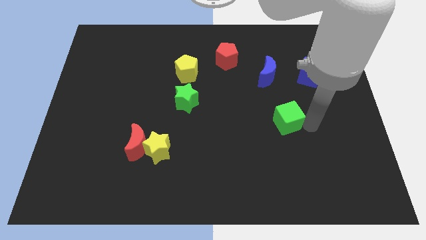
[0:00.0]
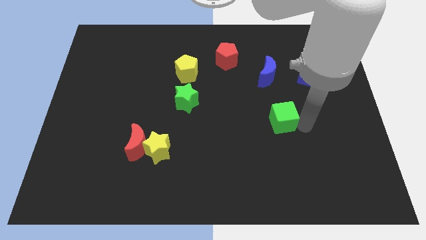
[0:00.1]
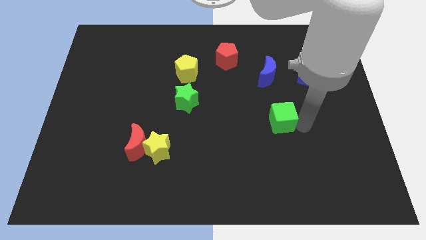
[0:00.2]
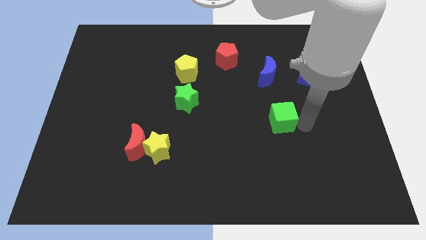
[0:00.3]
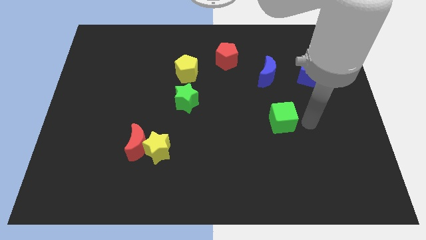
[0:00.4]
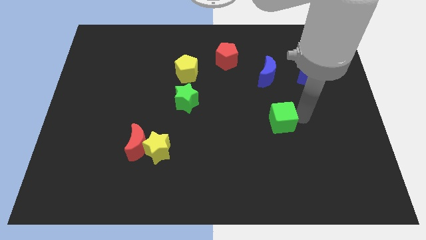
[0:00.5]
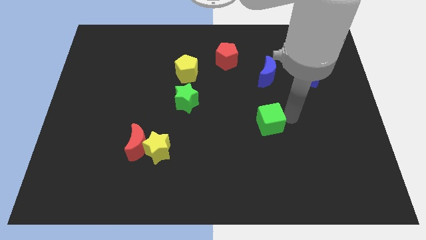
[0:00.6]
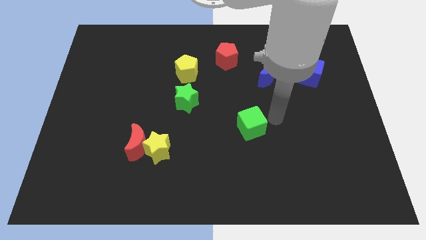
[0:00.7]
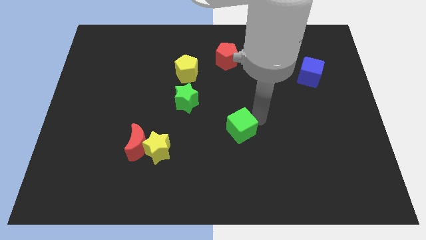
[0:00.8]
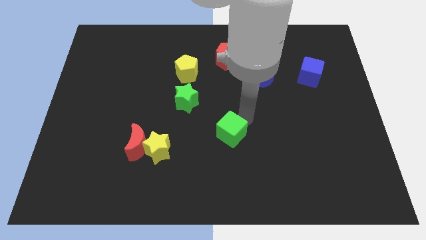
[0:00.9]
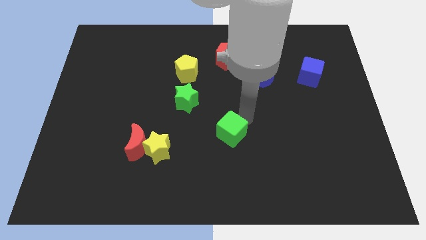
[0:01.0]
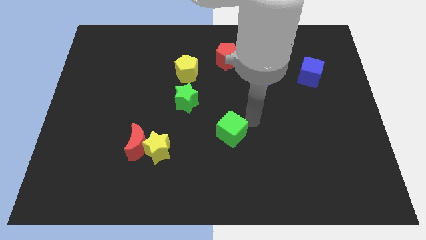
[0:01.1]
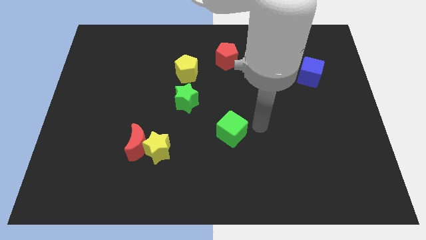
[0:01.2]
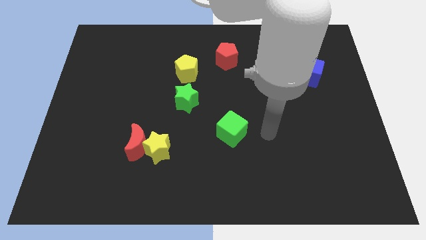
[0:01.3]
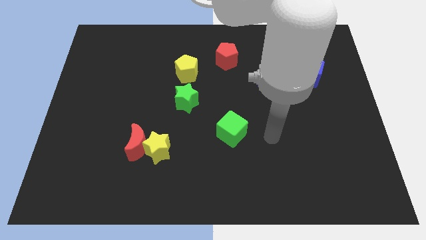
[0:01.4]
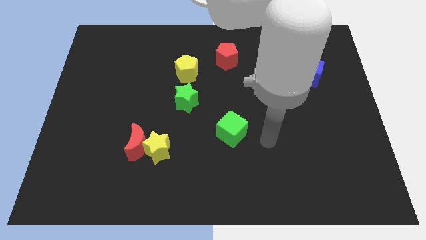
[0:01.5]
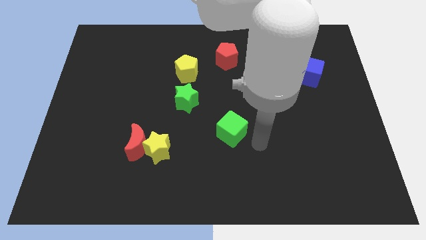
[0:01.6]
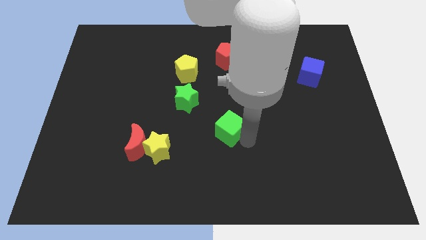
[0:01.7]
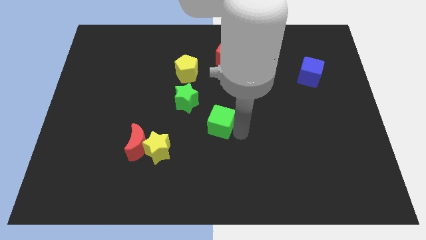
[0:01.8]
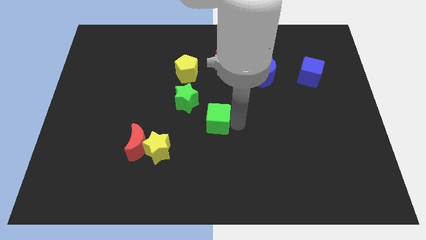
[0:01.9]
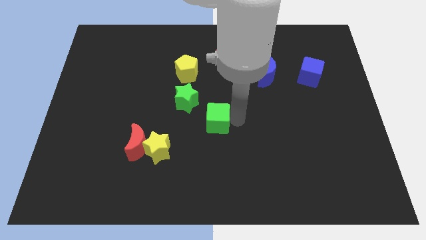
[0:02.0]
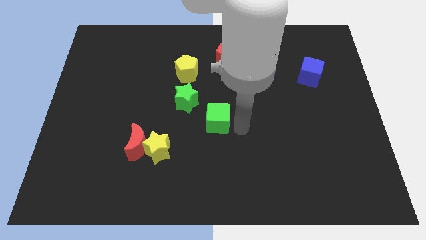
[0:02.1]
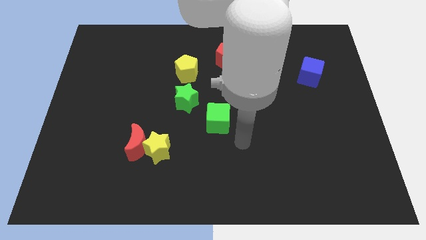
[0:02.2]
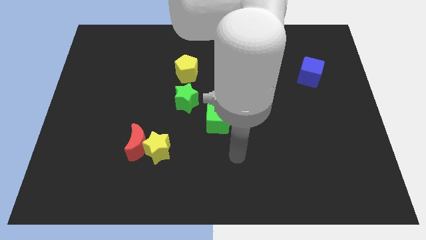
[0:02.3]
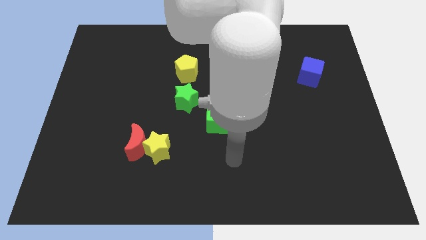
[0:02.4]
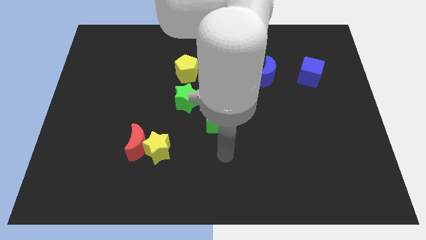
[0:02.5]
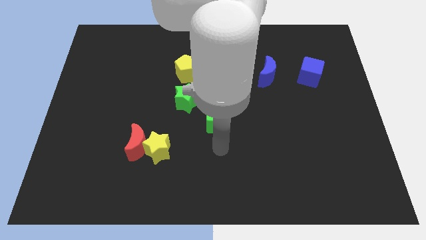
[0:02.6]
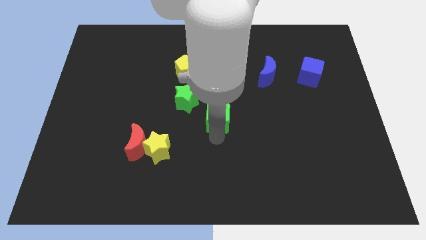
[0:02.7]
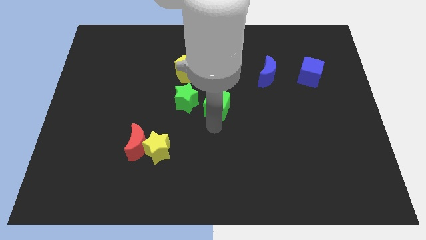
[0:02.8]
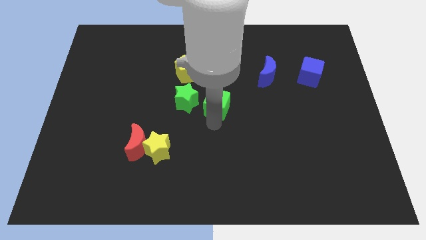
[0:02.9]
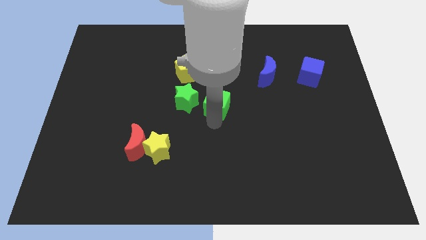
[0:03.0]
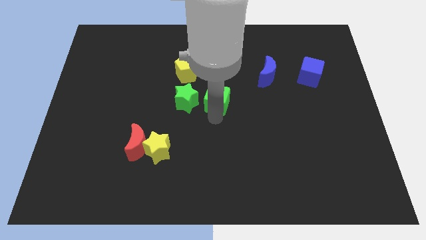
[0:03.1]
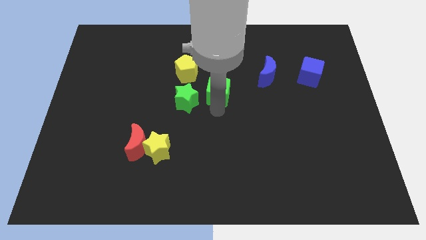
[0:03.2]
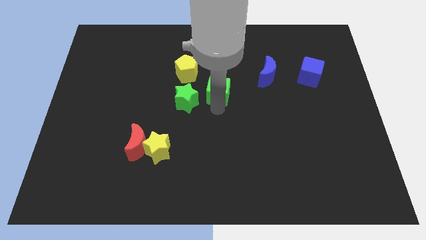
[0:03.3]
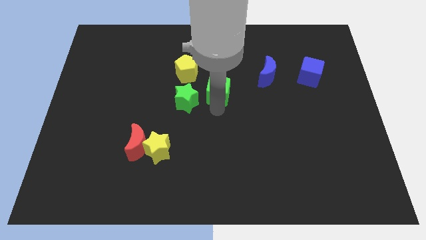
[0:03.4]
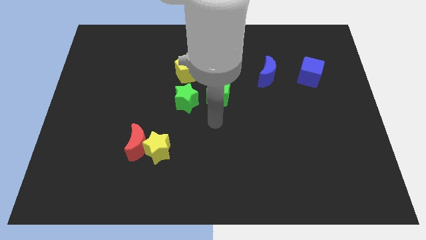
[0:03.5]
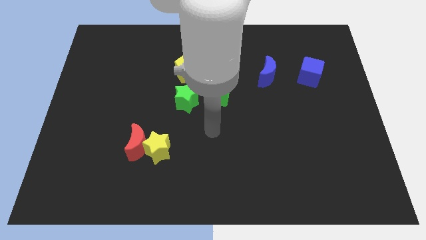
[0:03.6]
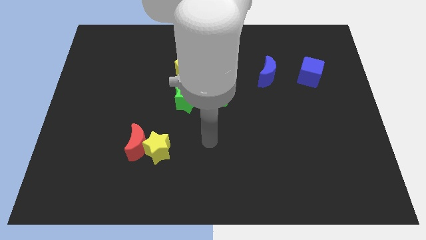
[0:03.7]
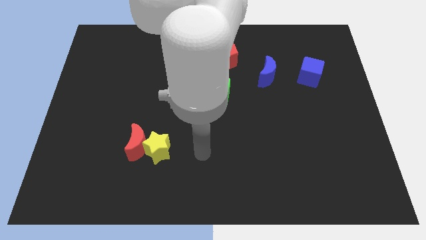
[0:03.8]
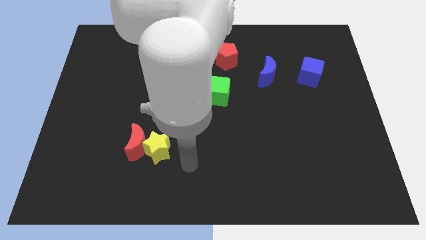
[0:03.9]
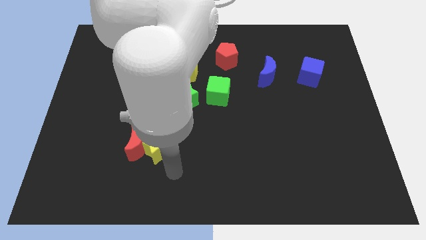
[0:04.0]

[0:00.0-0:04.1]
put the green cube diagonally to the right bottom of the green star

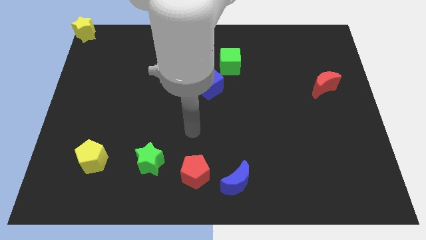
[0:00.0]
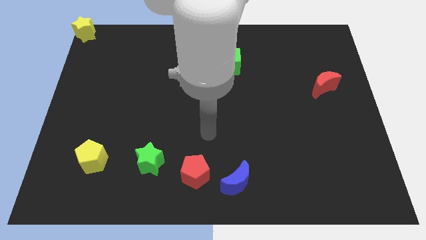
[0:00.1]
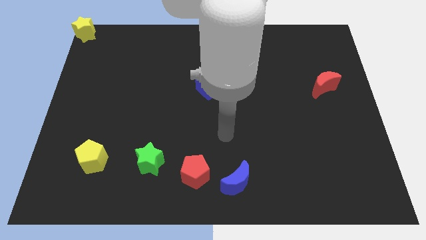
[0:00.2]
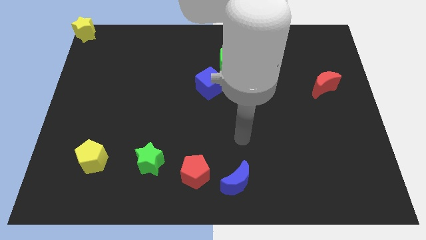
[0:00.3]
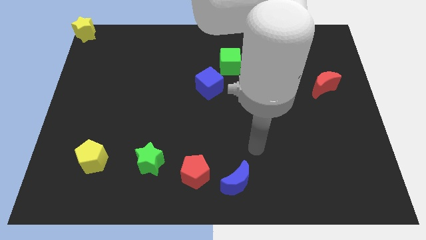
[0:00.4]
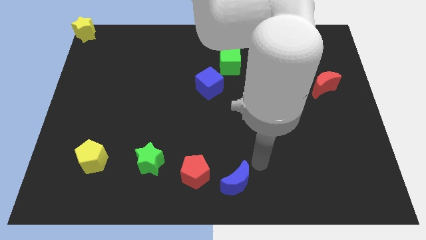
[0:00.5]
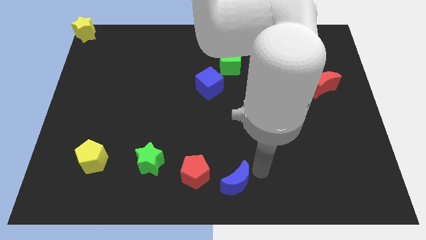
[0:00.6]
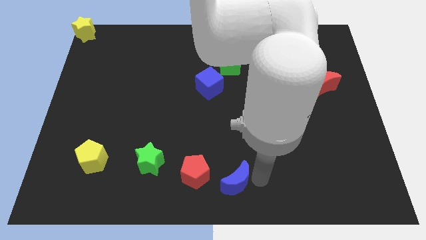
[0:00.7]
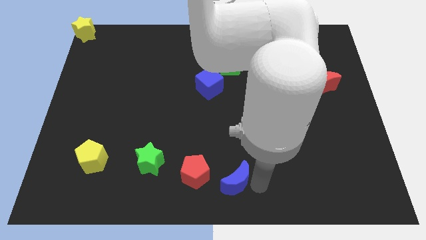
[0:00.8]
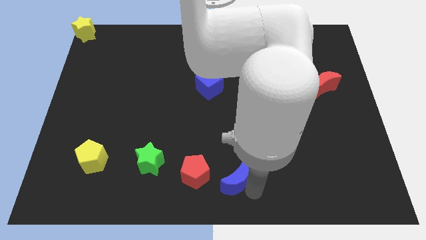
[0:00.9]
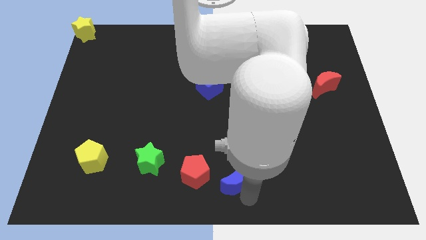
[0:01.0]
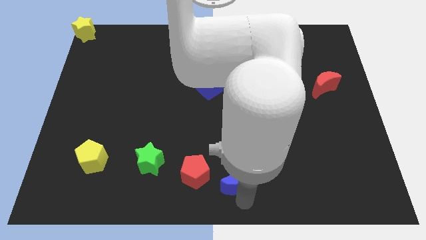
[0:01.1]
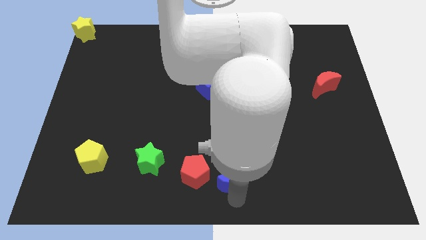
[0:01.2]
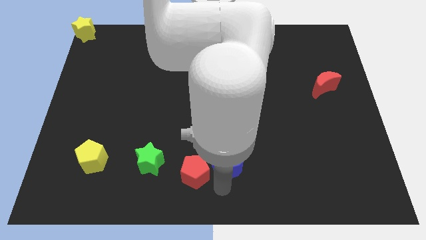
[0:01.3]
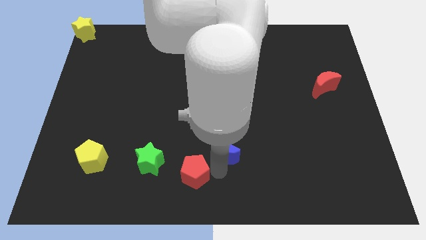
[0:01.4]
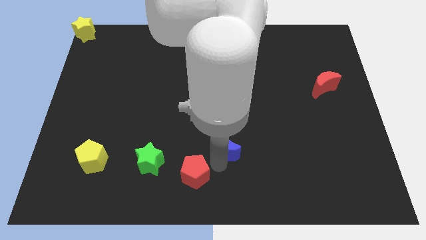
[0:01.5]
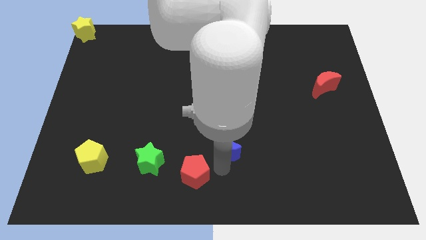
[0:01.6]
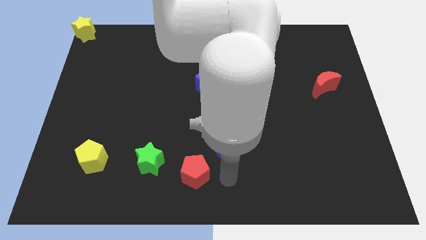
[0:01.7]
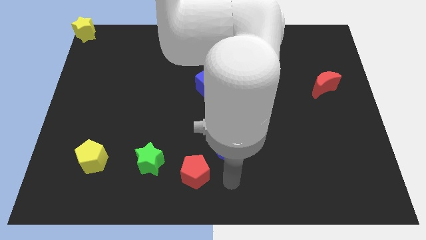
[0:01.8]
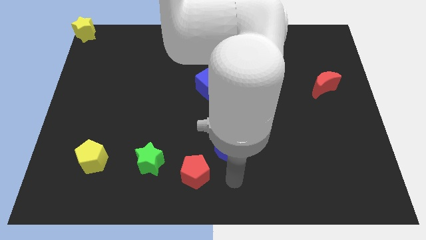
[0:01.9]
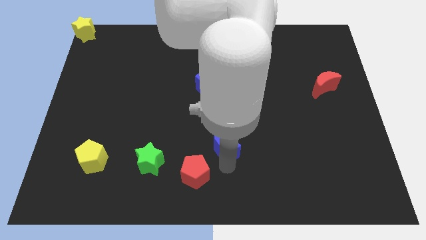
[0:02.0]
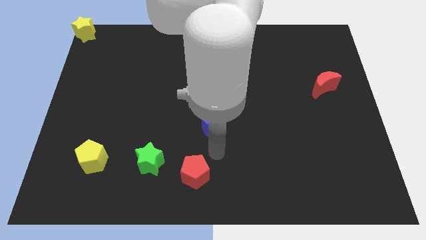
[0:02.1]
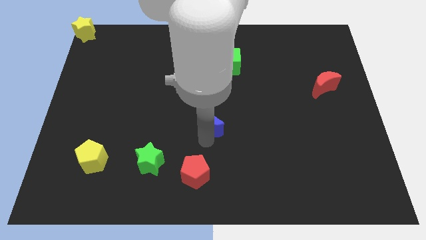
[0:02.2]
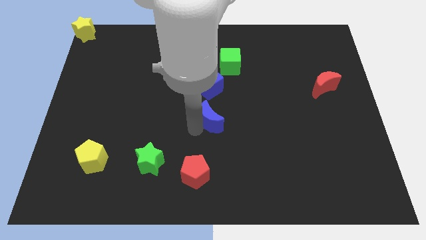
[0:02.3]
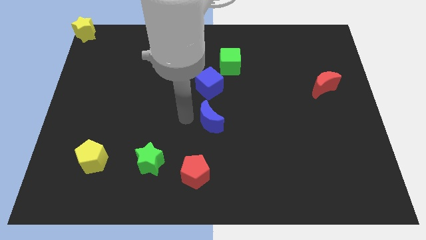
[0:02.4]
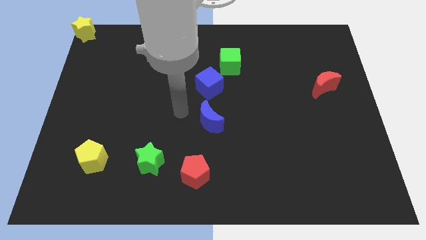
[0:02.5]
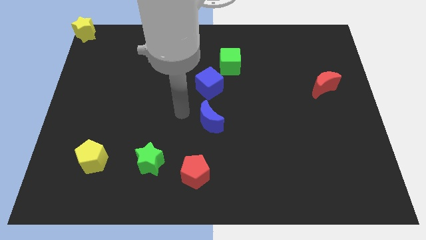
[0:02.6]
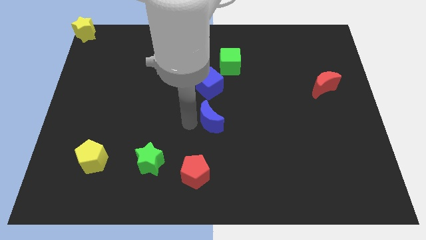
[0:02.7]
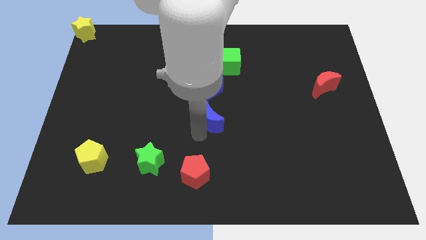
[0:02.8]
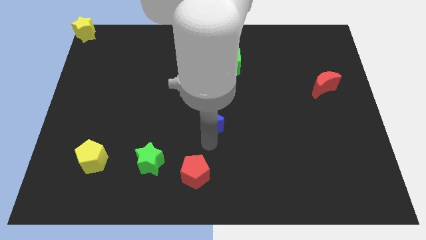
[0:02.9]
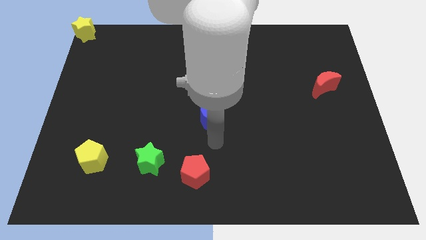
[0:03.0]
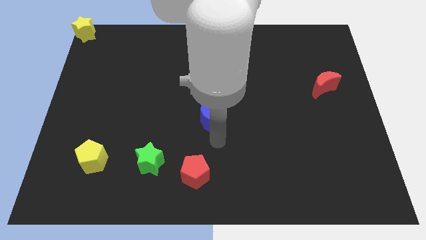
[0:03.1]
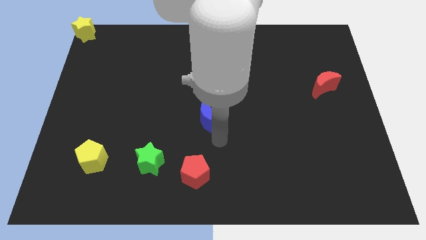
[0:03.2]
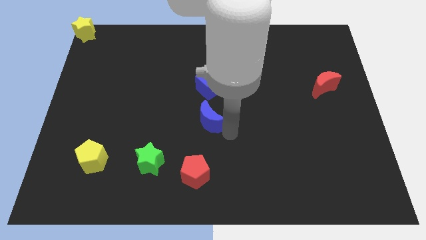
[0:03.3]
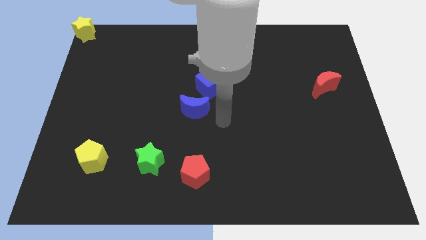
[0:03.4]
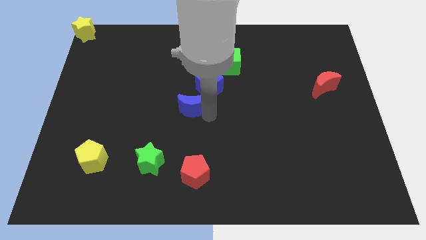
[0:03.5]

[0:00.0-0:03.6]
place blue moon to the left bottom of blue cube

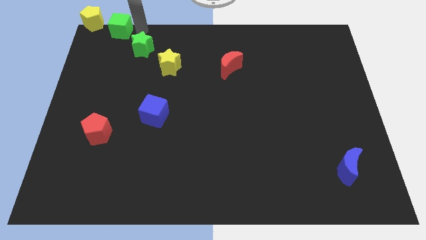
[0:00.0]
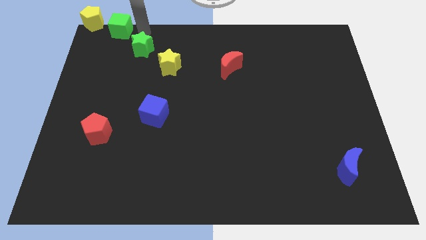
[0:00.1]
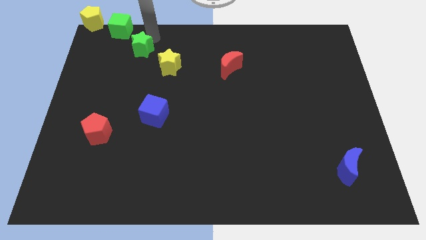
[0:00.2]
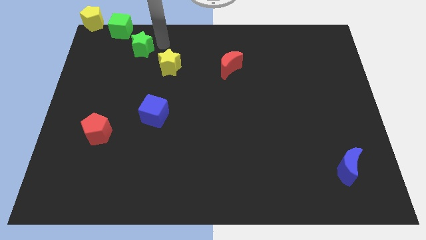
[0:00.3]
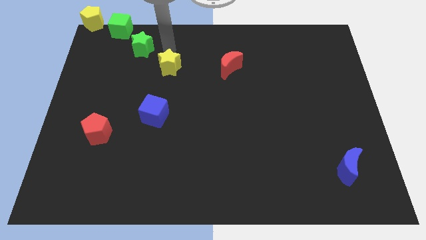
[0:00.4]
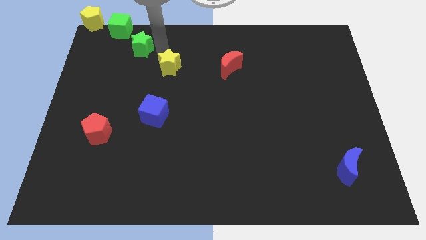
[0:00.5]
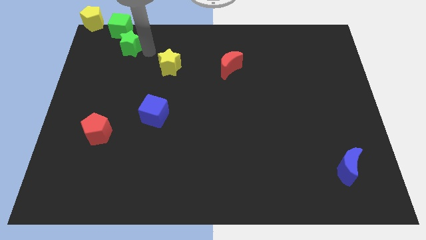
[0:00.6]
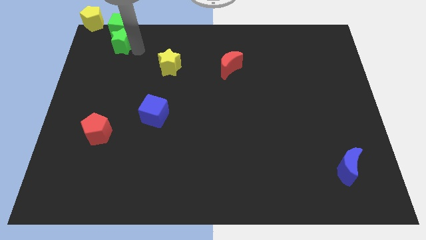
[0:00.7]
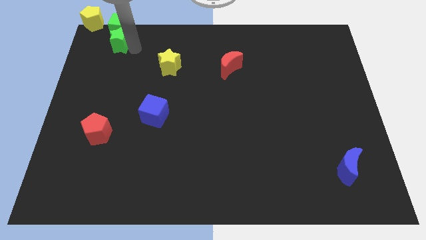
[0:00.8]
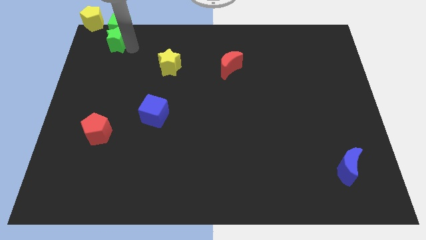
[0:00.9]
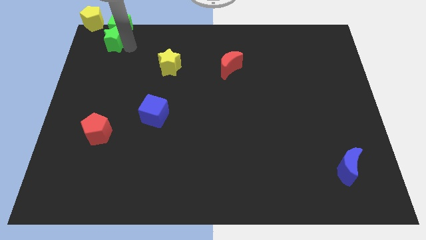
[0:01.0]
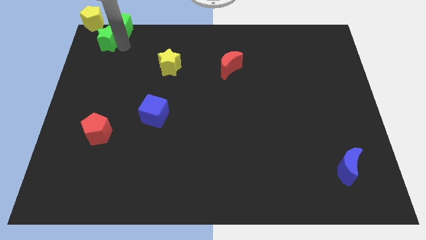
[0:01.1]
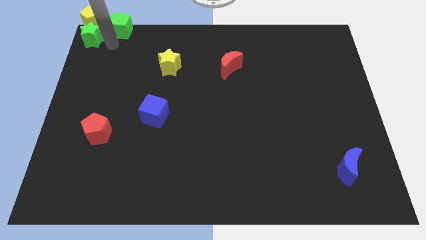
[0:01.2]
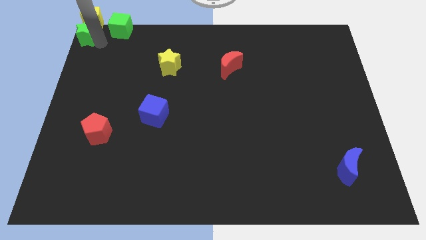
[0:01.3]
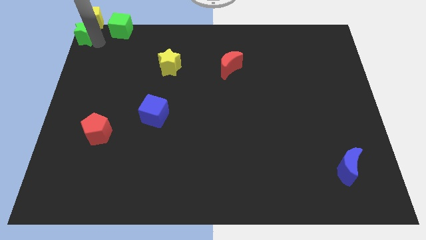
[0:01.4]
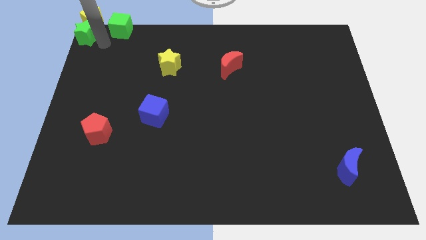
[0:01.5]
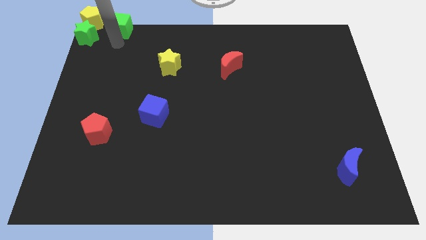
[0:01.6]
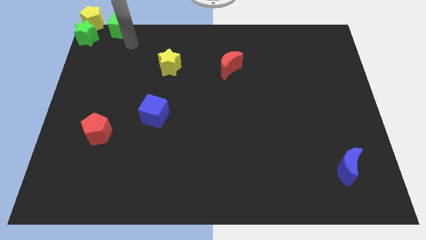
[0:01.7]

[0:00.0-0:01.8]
place the green star under the yellow pentagon
